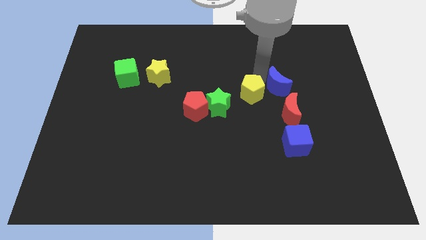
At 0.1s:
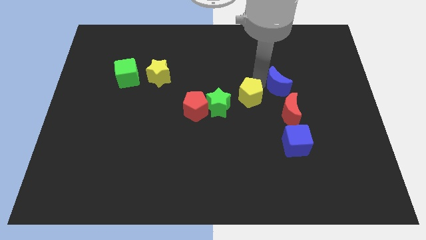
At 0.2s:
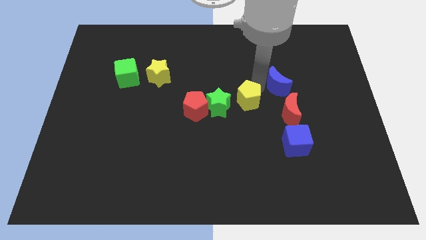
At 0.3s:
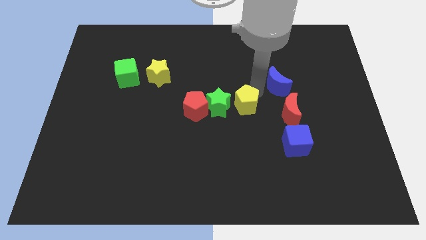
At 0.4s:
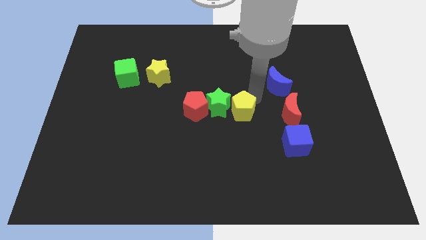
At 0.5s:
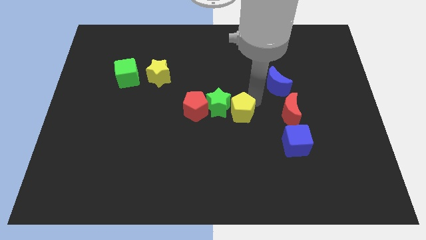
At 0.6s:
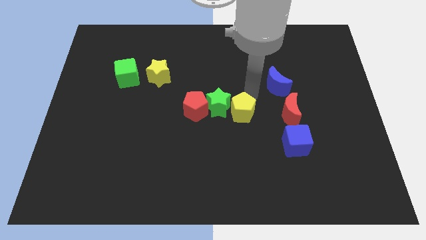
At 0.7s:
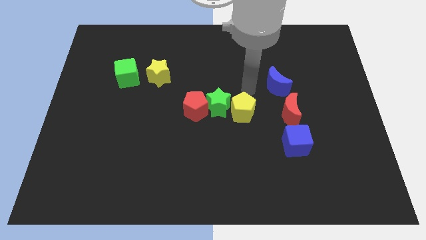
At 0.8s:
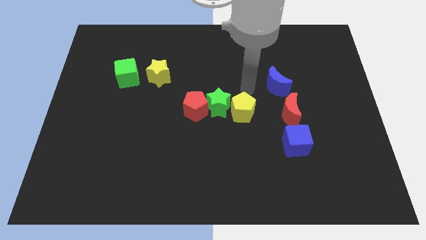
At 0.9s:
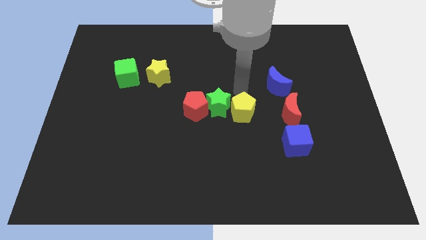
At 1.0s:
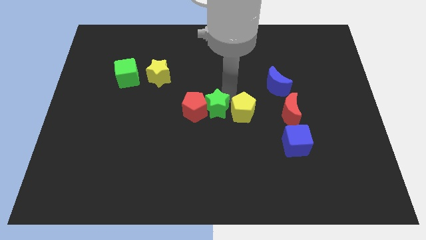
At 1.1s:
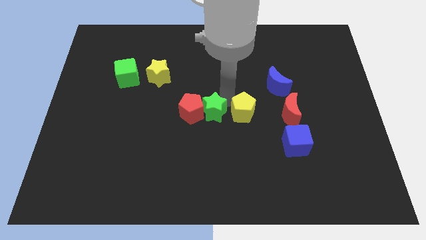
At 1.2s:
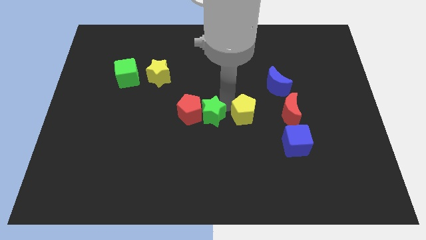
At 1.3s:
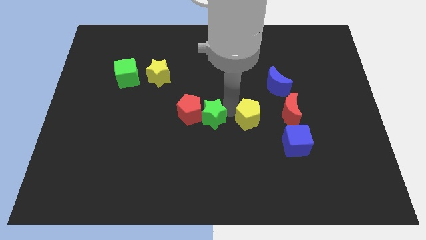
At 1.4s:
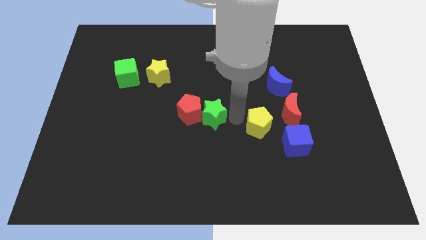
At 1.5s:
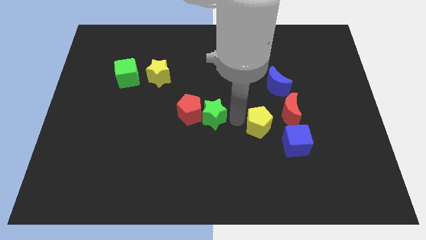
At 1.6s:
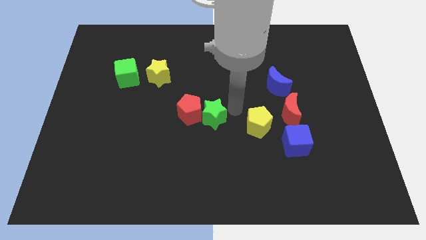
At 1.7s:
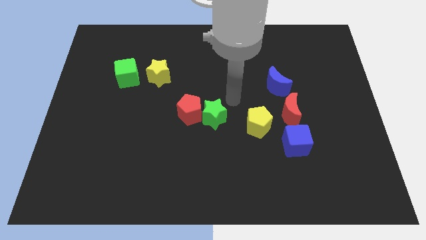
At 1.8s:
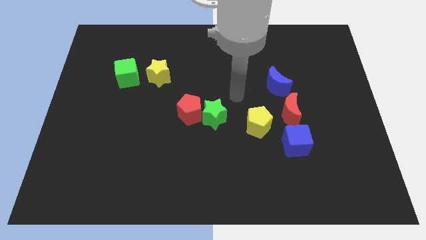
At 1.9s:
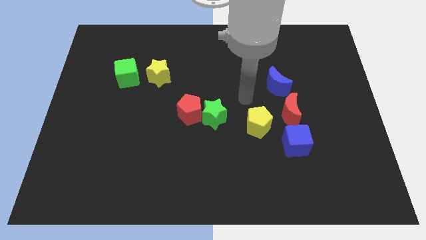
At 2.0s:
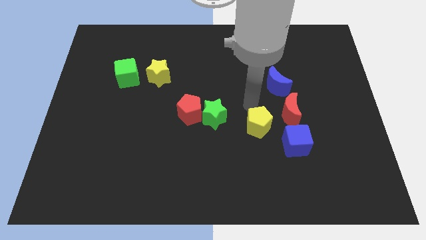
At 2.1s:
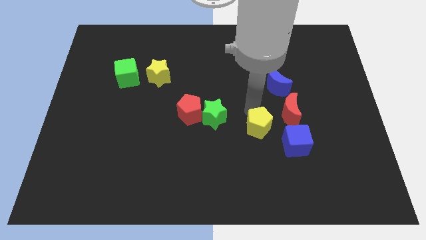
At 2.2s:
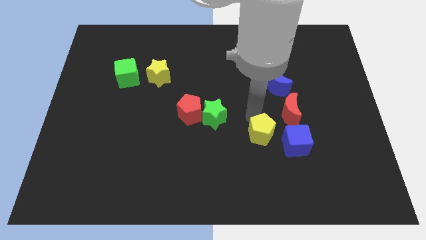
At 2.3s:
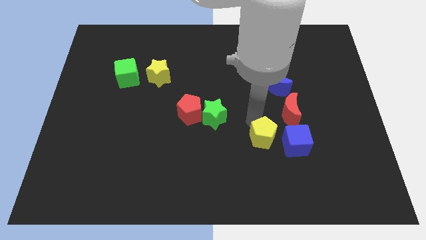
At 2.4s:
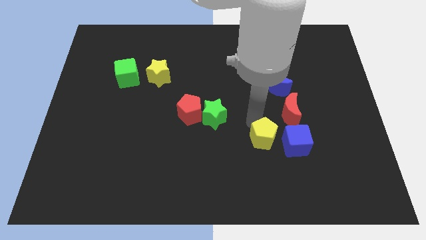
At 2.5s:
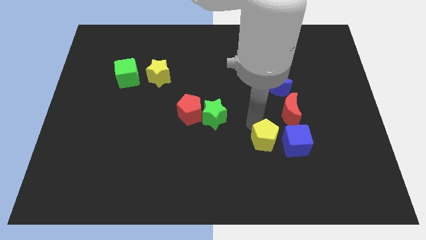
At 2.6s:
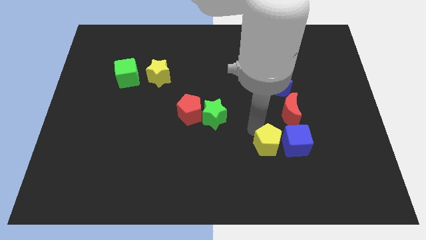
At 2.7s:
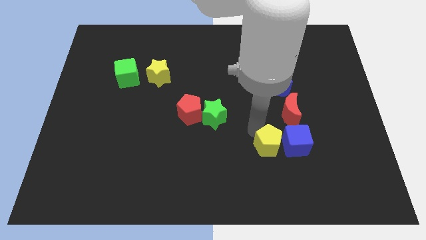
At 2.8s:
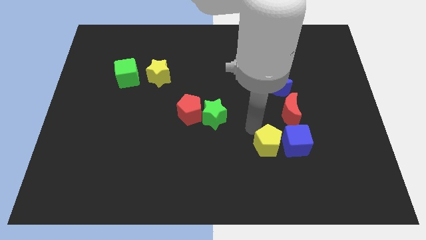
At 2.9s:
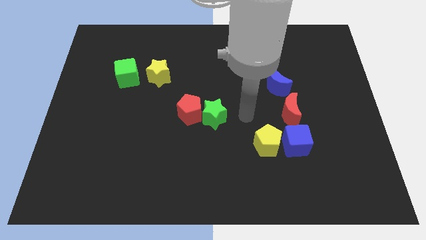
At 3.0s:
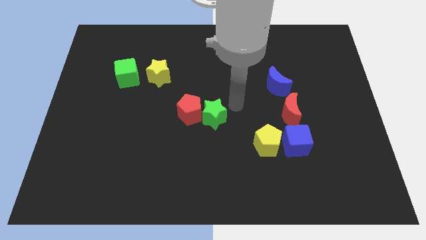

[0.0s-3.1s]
push the yellow pentagon close to the blue cube

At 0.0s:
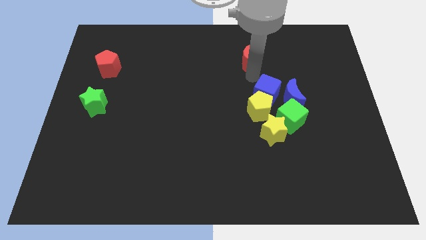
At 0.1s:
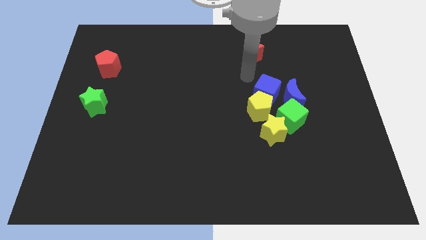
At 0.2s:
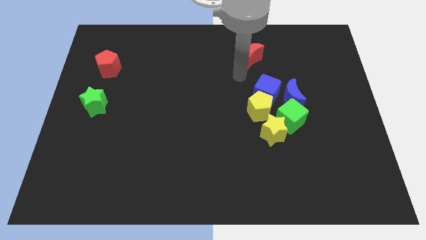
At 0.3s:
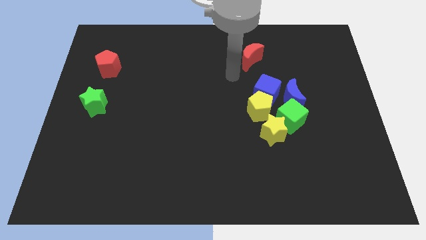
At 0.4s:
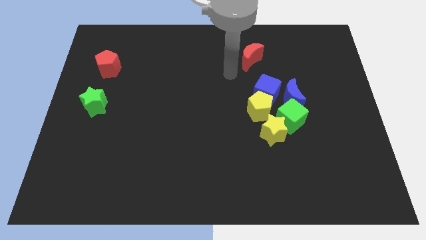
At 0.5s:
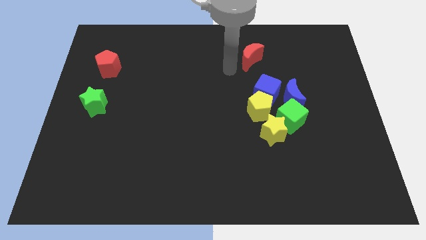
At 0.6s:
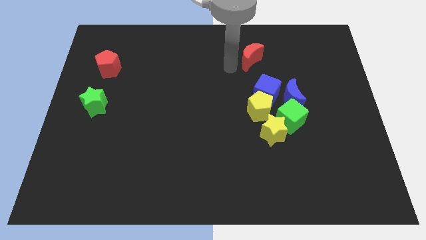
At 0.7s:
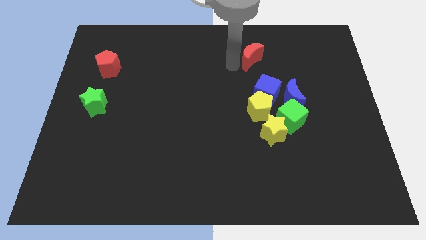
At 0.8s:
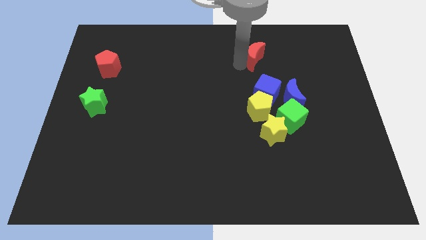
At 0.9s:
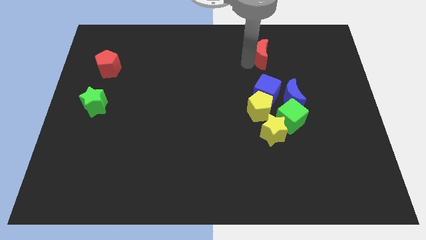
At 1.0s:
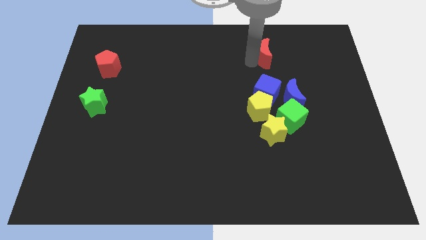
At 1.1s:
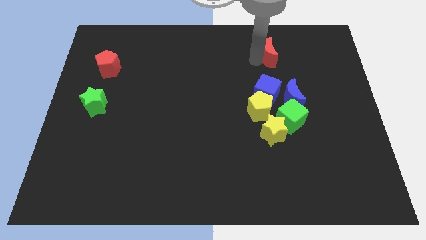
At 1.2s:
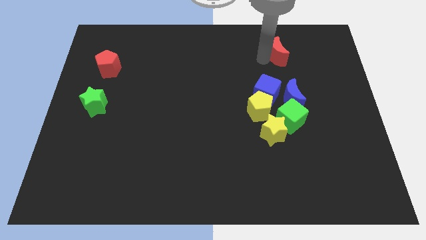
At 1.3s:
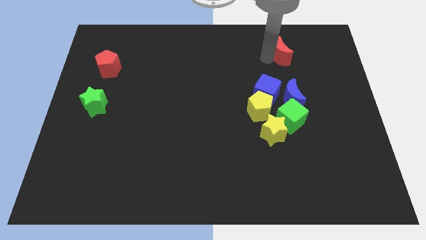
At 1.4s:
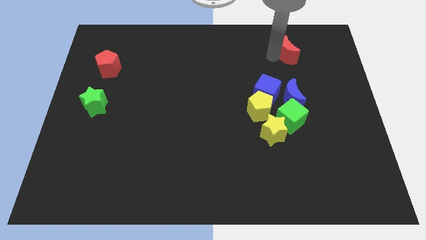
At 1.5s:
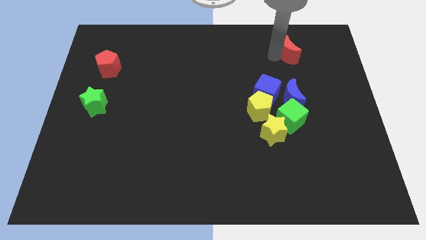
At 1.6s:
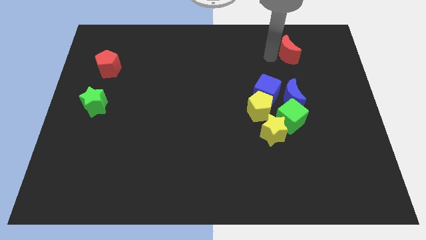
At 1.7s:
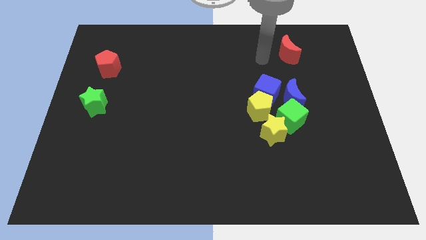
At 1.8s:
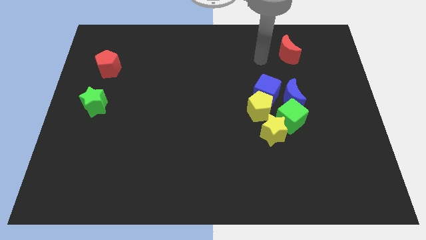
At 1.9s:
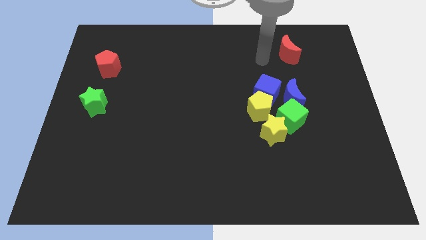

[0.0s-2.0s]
move the red moon above the blue moon

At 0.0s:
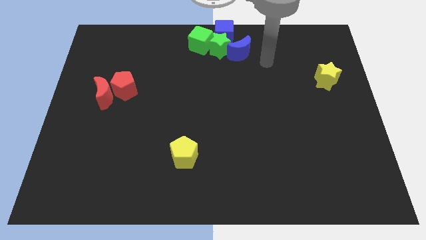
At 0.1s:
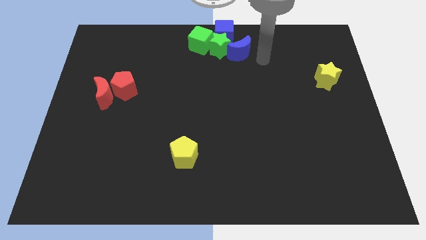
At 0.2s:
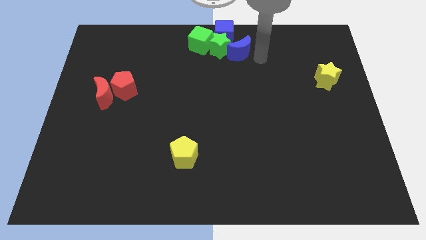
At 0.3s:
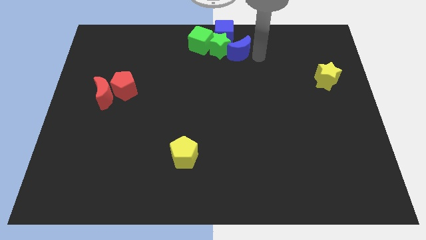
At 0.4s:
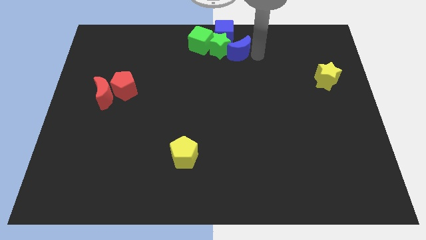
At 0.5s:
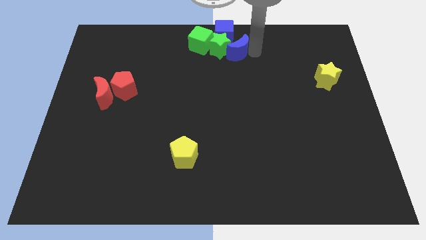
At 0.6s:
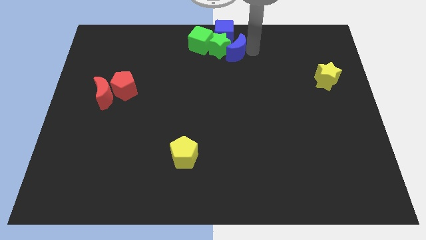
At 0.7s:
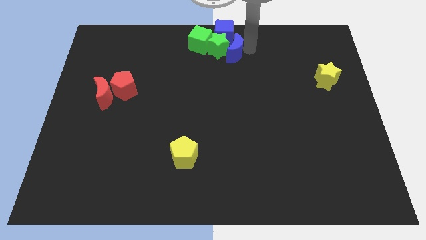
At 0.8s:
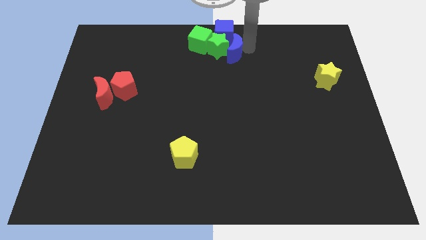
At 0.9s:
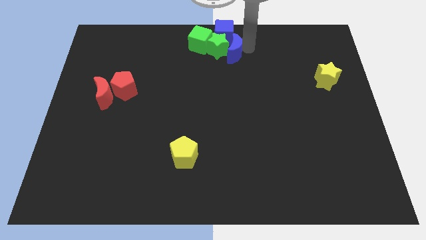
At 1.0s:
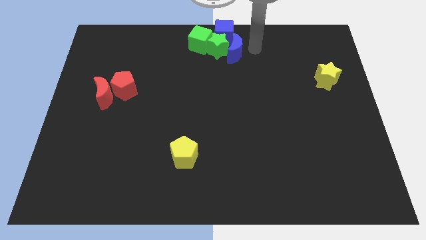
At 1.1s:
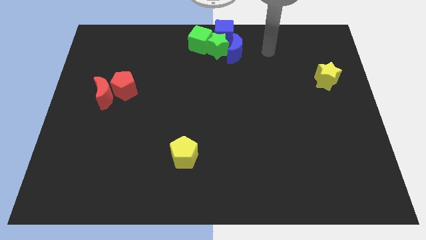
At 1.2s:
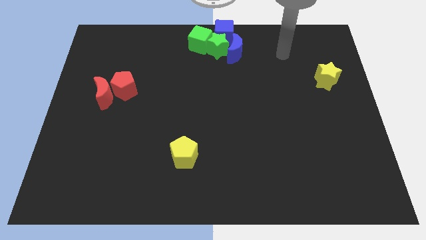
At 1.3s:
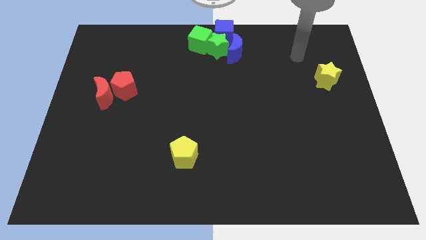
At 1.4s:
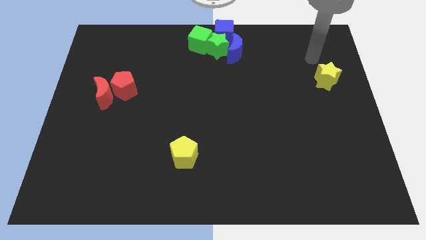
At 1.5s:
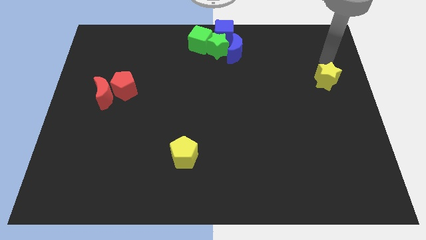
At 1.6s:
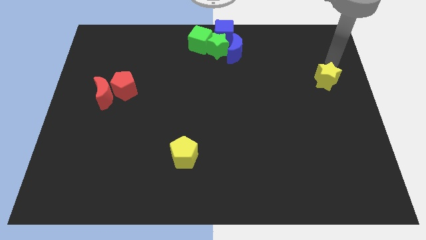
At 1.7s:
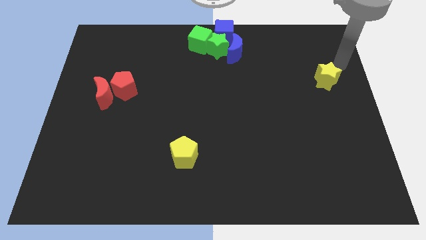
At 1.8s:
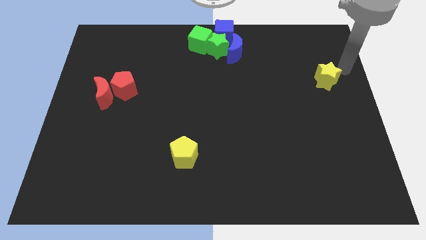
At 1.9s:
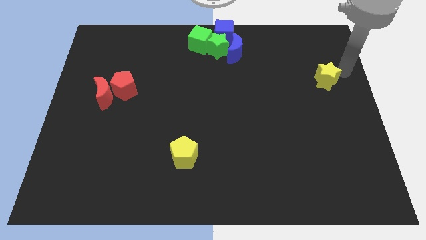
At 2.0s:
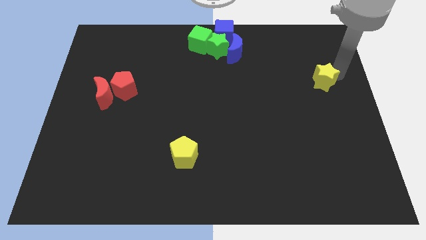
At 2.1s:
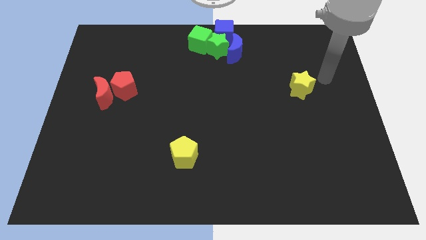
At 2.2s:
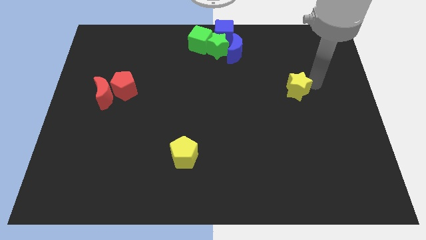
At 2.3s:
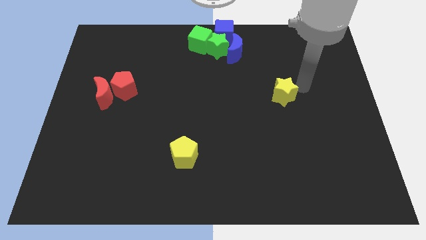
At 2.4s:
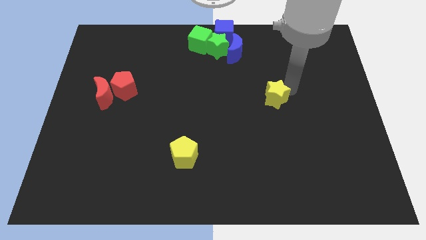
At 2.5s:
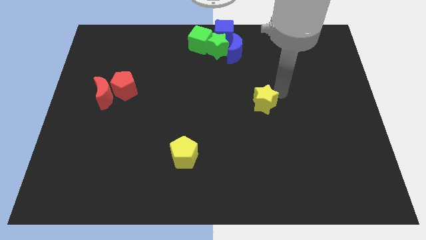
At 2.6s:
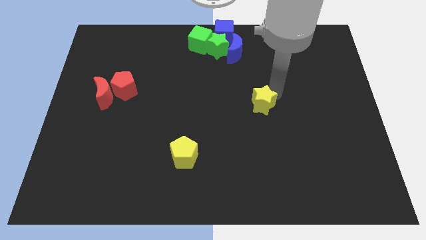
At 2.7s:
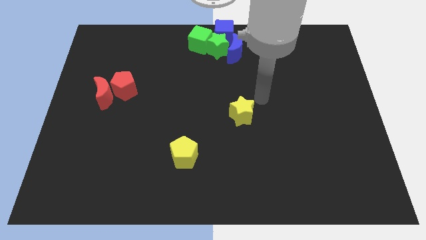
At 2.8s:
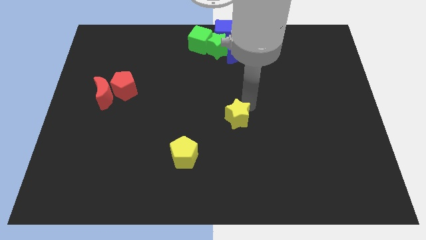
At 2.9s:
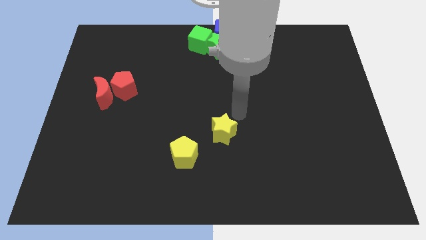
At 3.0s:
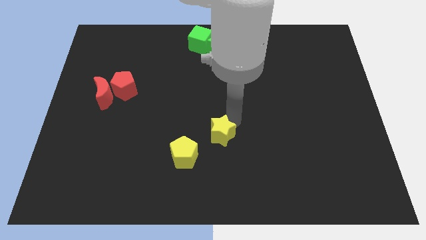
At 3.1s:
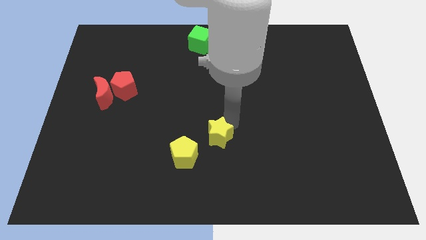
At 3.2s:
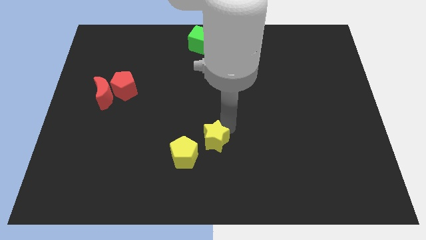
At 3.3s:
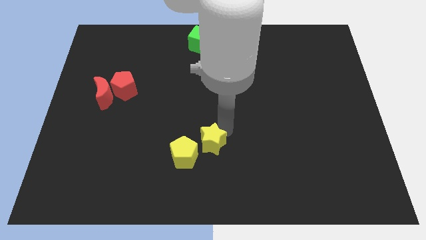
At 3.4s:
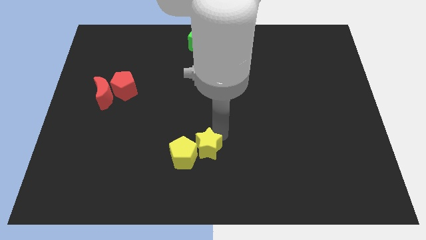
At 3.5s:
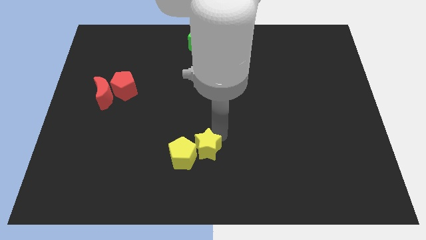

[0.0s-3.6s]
push the yellow star into the yellow pentagon

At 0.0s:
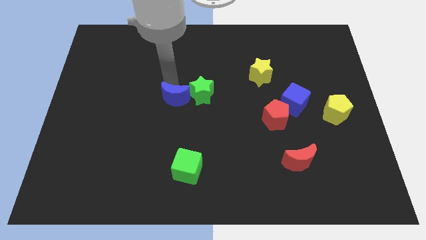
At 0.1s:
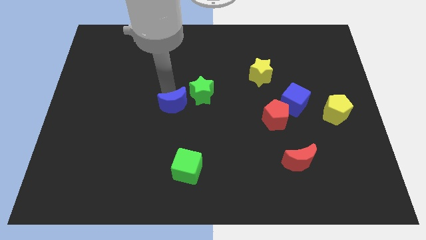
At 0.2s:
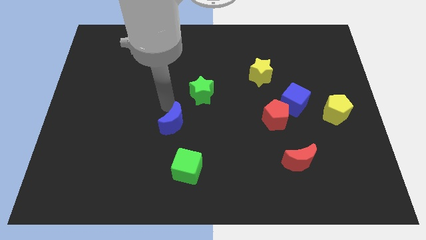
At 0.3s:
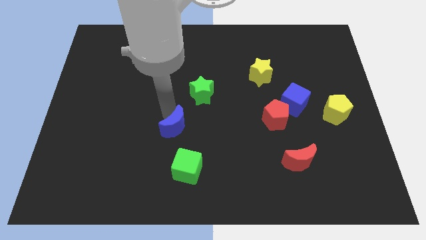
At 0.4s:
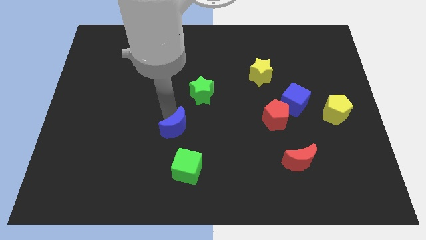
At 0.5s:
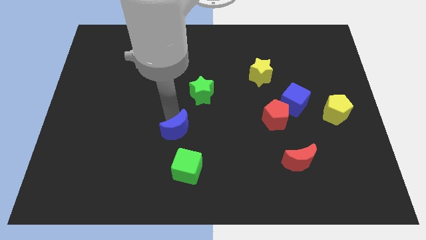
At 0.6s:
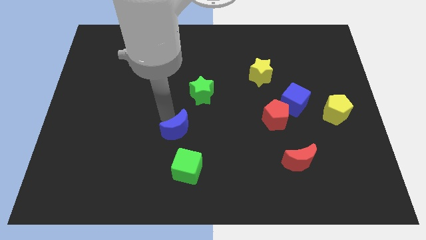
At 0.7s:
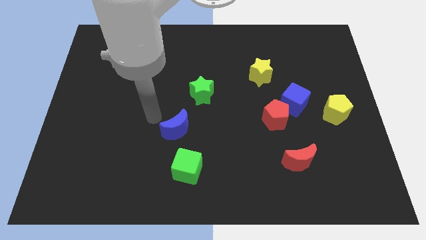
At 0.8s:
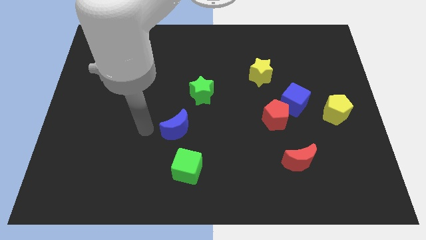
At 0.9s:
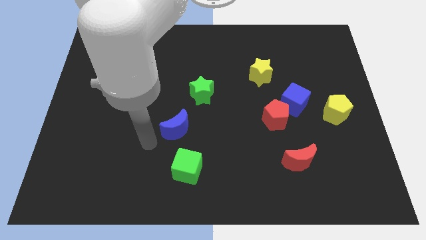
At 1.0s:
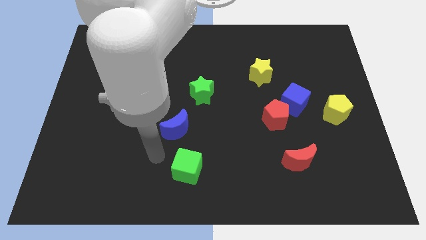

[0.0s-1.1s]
push the blue crescent to the top of the green cube
